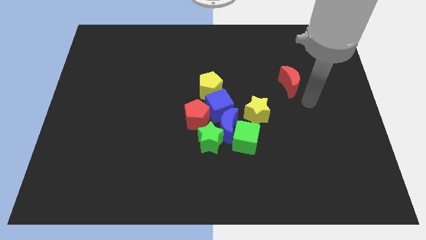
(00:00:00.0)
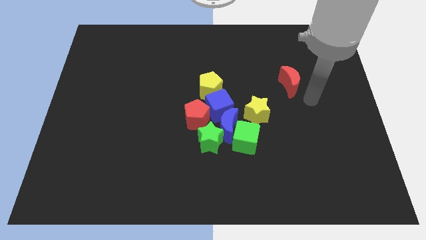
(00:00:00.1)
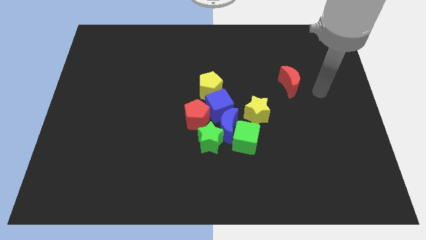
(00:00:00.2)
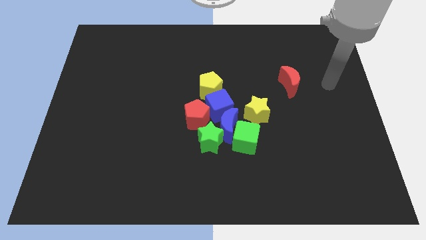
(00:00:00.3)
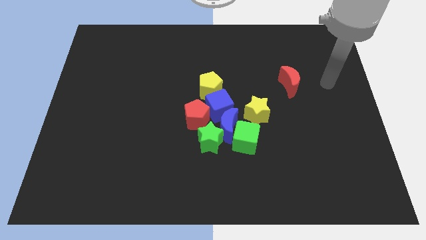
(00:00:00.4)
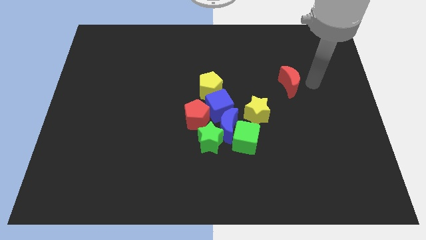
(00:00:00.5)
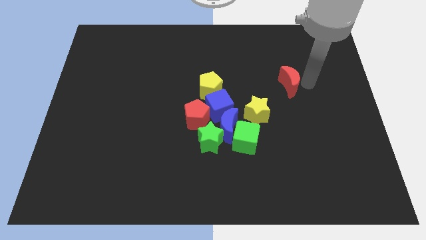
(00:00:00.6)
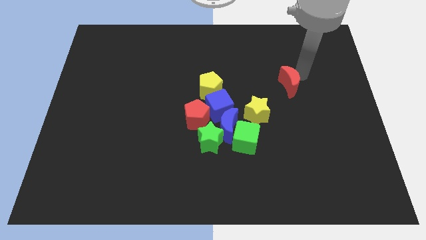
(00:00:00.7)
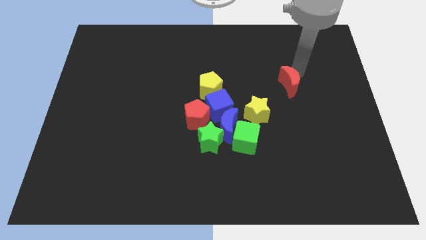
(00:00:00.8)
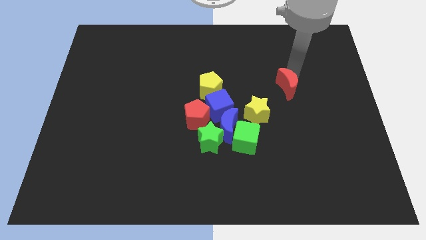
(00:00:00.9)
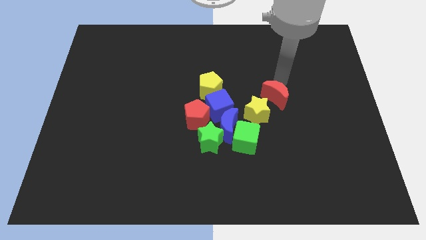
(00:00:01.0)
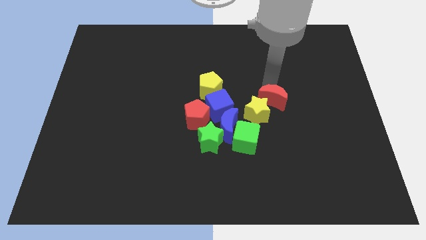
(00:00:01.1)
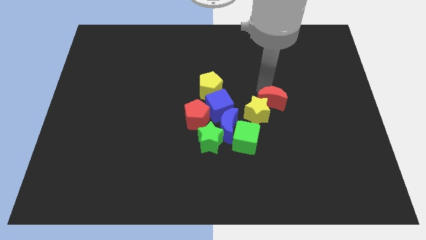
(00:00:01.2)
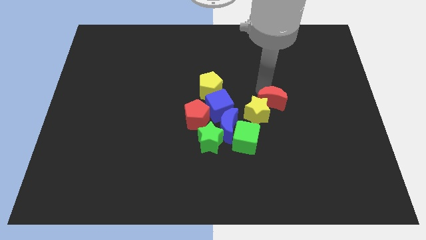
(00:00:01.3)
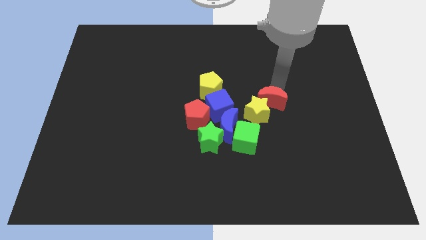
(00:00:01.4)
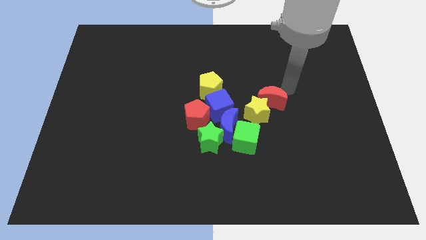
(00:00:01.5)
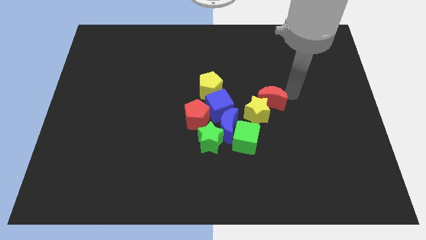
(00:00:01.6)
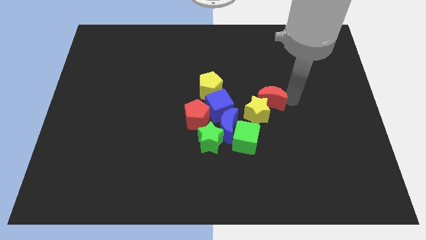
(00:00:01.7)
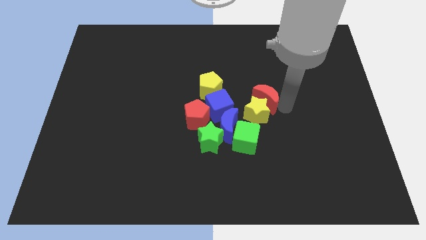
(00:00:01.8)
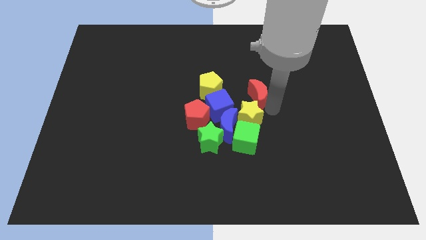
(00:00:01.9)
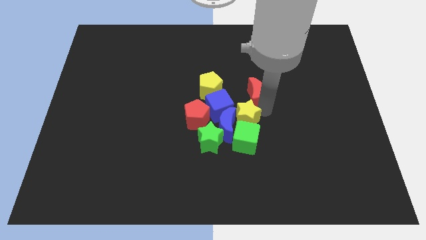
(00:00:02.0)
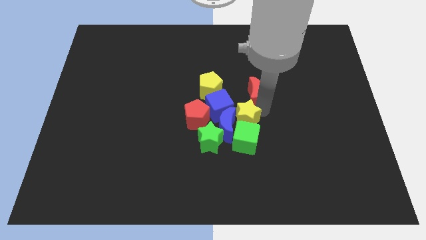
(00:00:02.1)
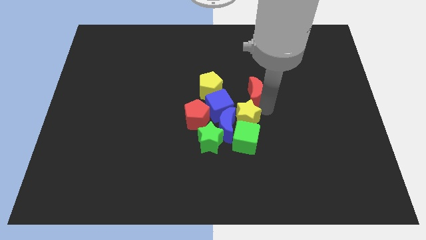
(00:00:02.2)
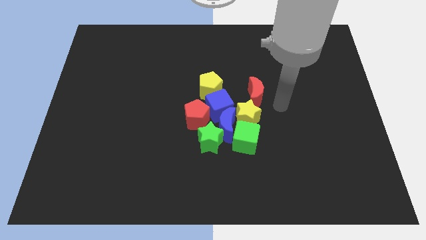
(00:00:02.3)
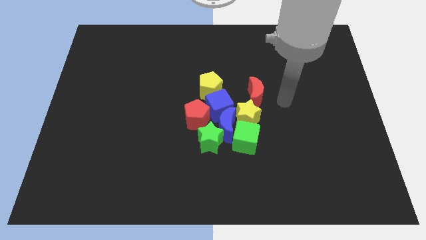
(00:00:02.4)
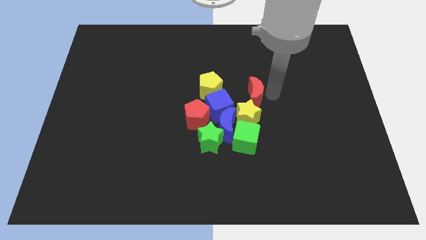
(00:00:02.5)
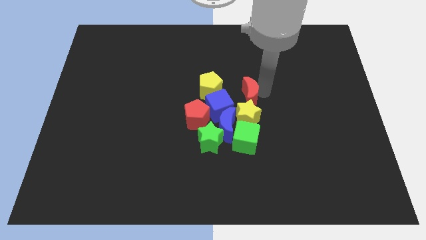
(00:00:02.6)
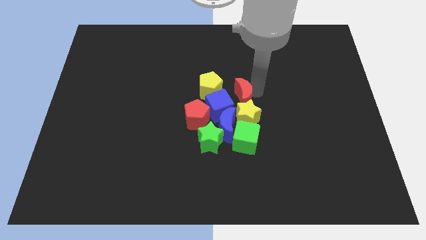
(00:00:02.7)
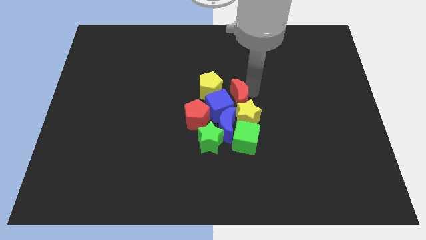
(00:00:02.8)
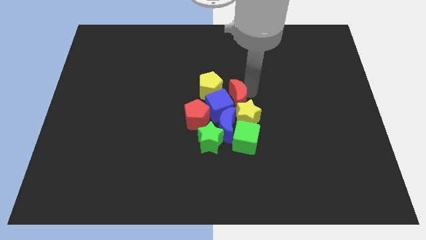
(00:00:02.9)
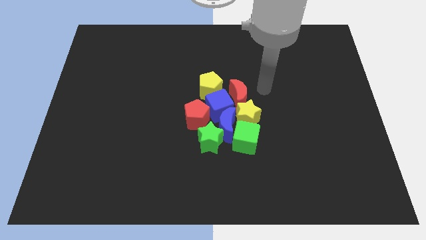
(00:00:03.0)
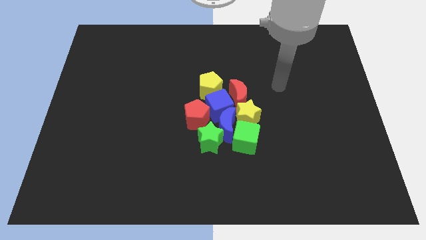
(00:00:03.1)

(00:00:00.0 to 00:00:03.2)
place red crescent beside blue cube

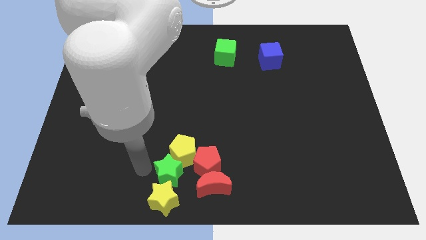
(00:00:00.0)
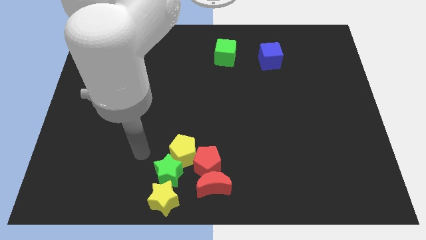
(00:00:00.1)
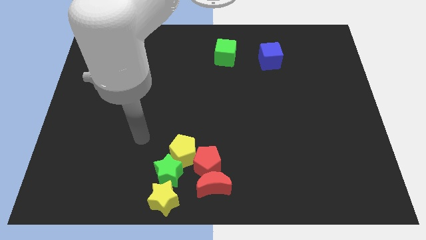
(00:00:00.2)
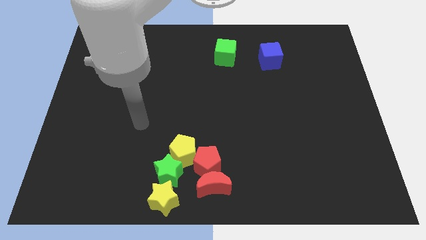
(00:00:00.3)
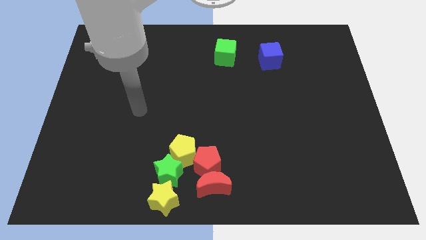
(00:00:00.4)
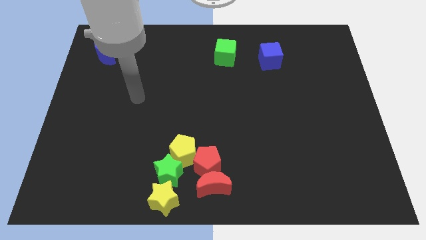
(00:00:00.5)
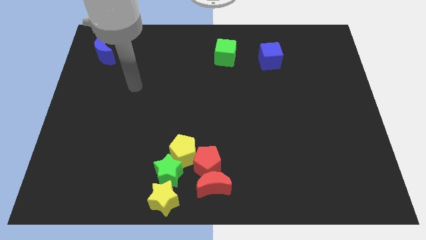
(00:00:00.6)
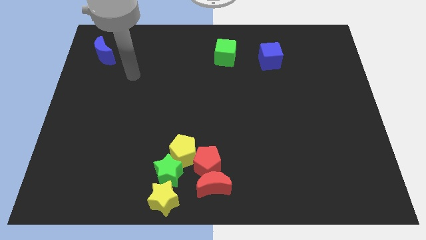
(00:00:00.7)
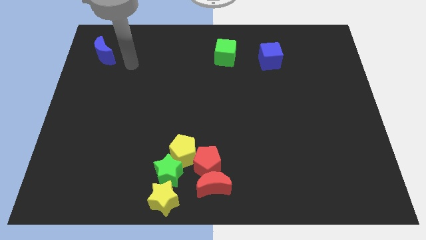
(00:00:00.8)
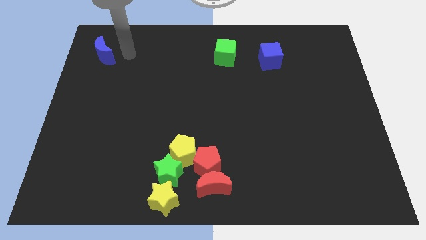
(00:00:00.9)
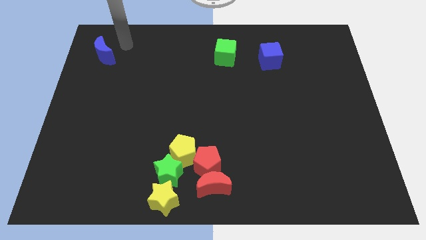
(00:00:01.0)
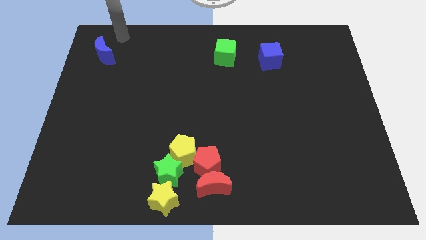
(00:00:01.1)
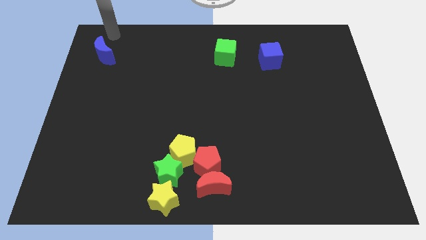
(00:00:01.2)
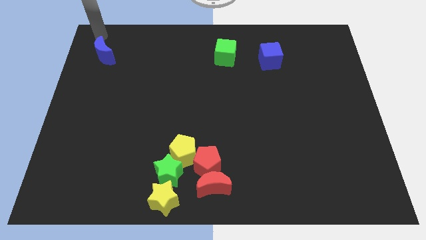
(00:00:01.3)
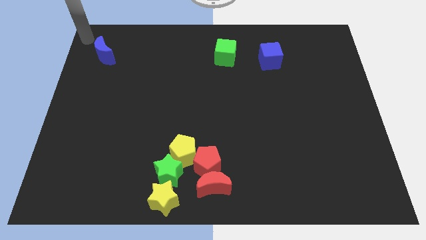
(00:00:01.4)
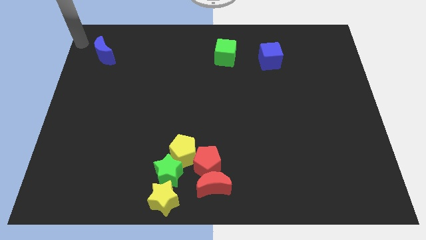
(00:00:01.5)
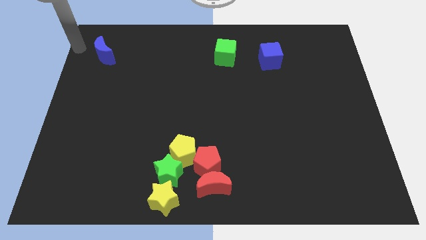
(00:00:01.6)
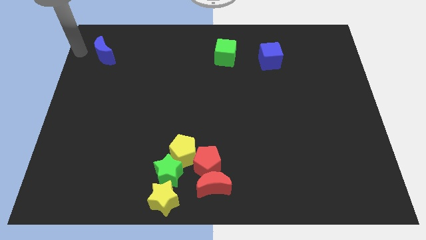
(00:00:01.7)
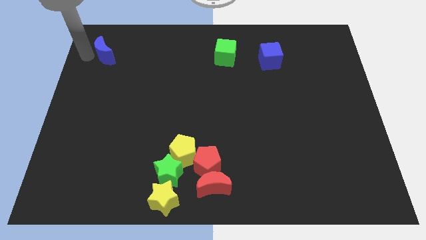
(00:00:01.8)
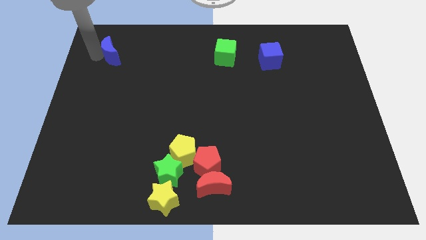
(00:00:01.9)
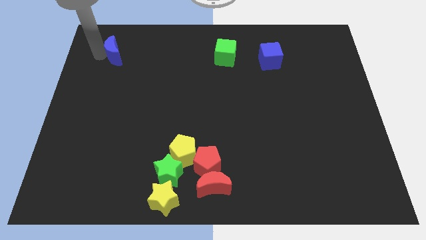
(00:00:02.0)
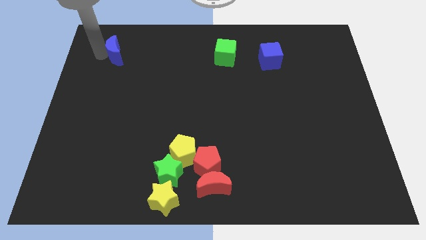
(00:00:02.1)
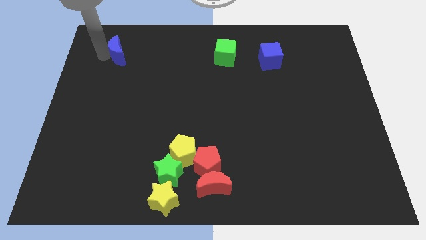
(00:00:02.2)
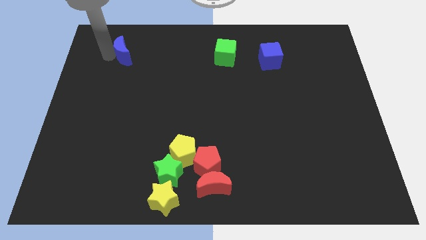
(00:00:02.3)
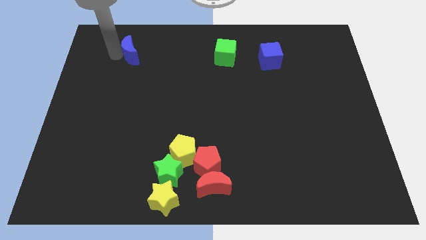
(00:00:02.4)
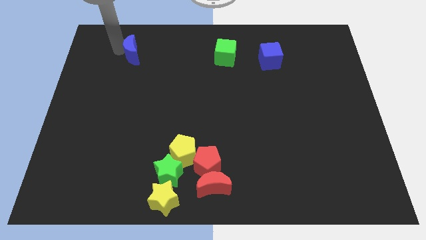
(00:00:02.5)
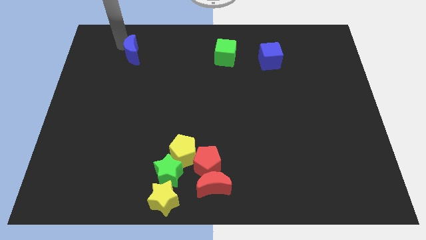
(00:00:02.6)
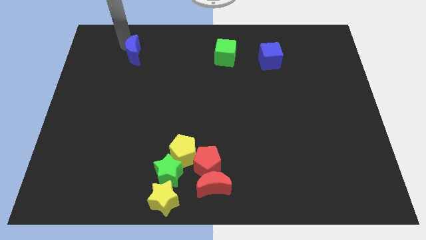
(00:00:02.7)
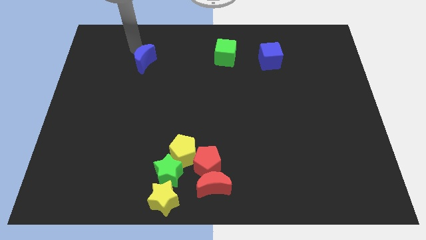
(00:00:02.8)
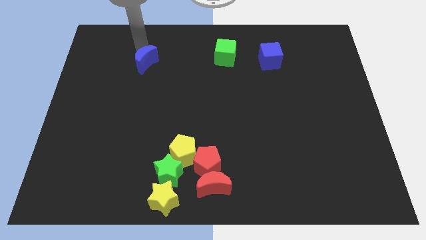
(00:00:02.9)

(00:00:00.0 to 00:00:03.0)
push the blue crescent slightly right side to the green cube

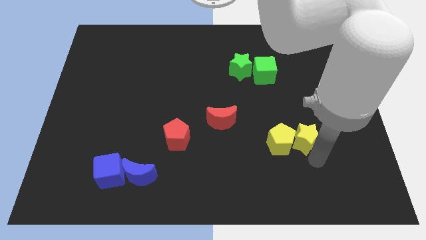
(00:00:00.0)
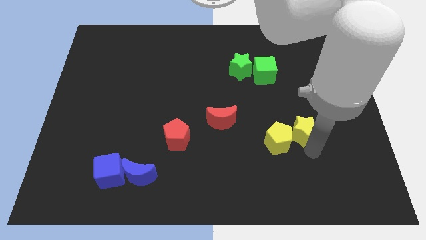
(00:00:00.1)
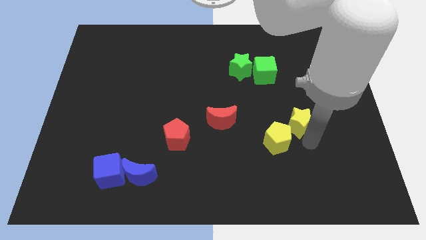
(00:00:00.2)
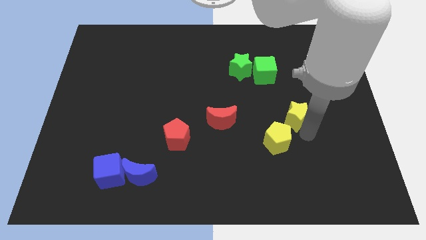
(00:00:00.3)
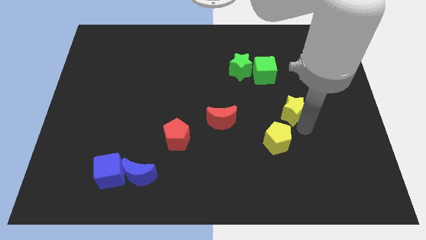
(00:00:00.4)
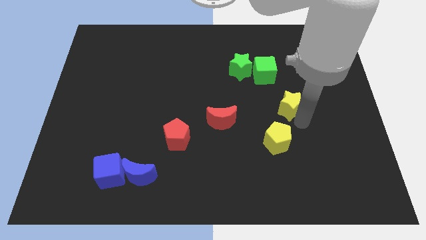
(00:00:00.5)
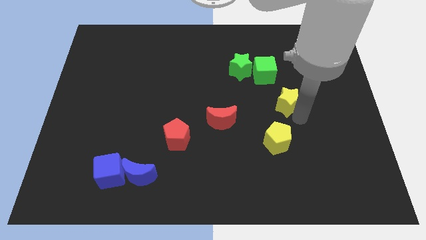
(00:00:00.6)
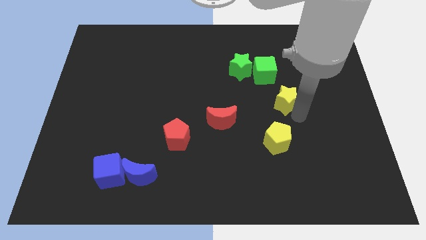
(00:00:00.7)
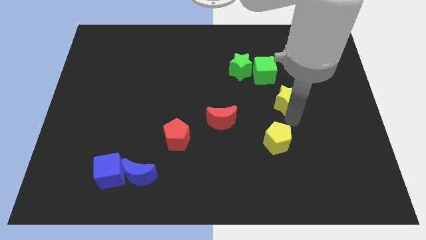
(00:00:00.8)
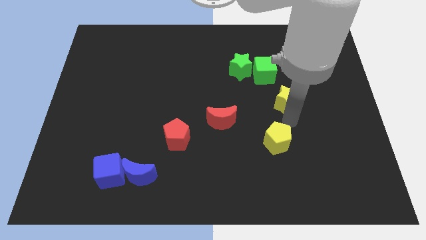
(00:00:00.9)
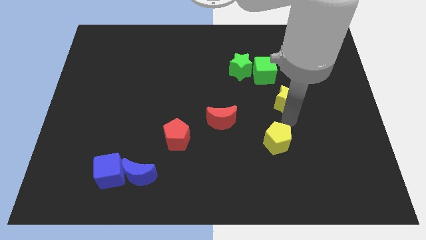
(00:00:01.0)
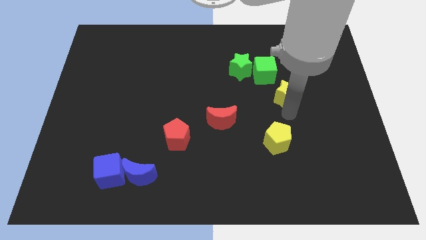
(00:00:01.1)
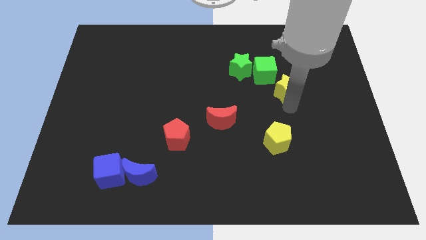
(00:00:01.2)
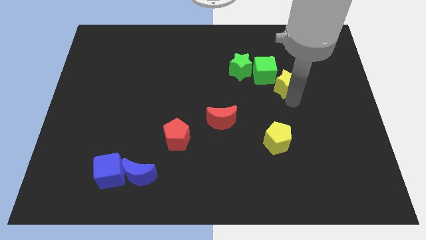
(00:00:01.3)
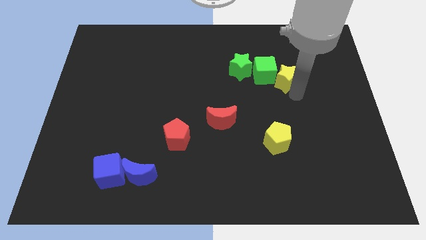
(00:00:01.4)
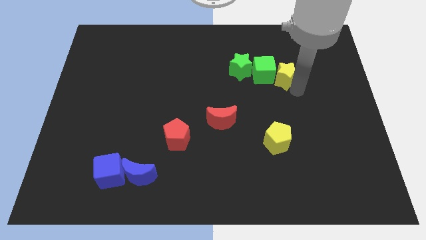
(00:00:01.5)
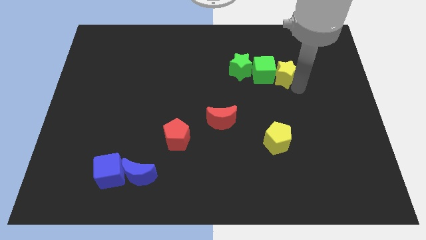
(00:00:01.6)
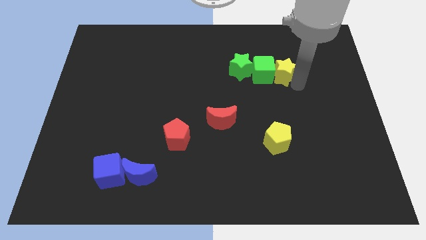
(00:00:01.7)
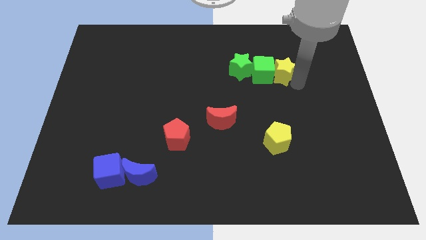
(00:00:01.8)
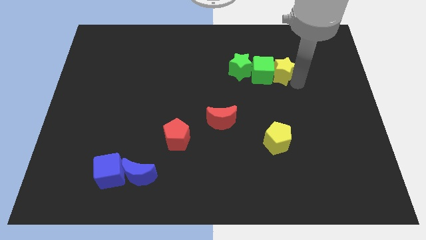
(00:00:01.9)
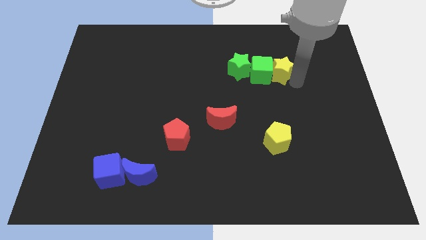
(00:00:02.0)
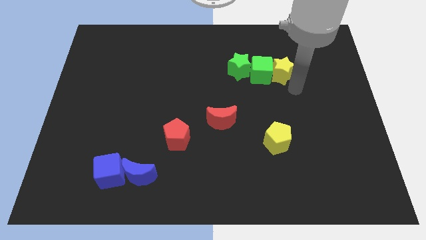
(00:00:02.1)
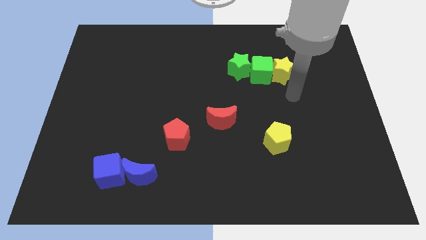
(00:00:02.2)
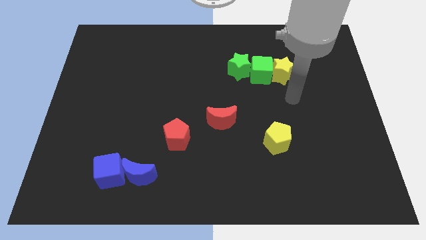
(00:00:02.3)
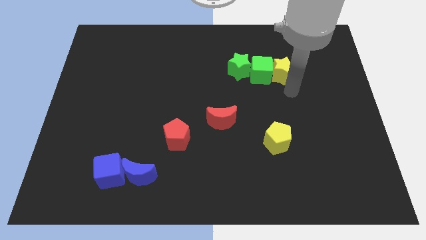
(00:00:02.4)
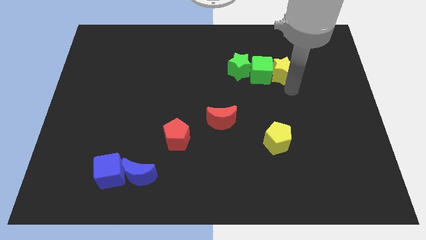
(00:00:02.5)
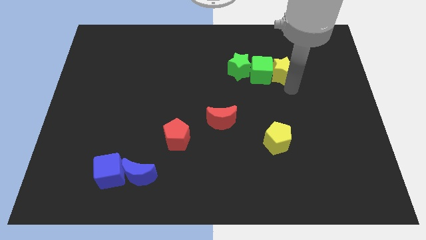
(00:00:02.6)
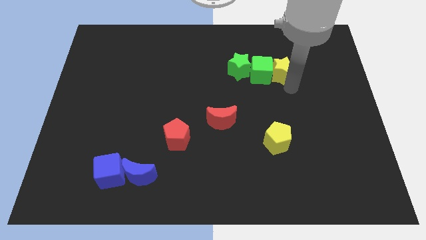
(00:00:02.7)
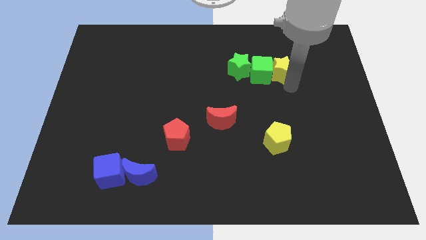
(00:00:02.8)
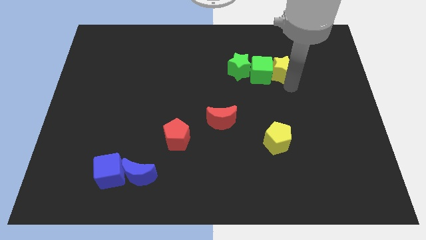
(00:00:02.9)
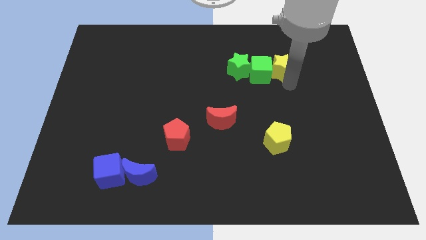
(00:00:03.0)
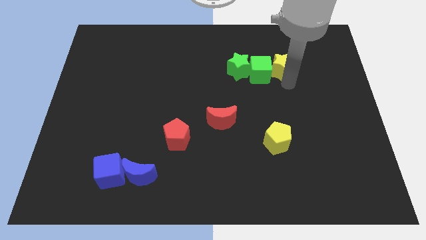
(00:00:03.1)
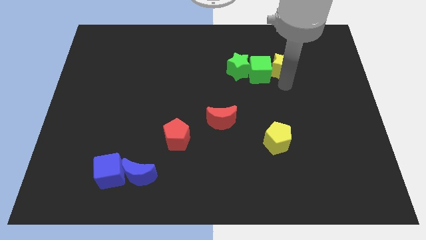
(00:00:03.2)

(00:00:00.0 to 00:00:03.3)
slide the yellow star into the right side of the green cube
